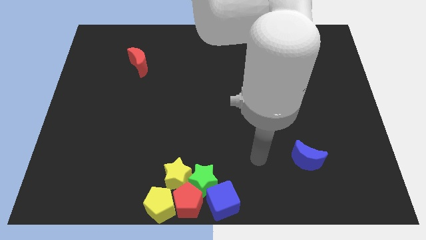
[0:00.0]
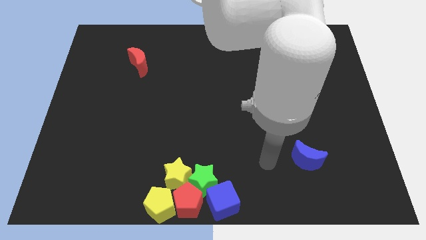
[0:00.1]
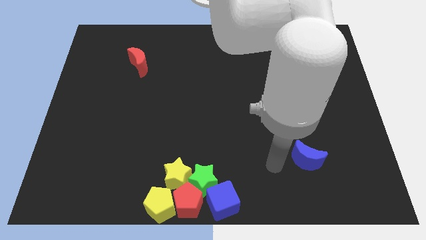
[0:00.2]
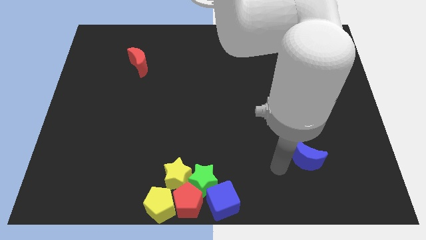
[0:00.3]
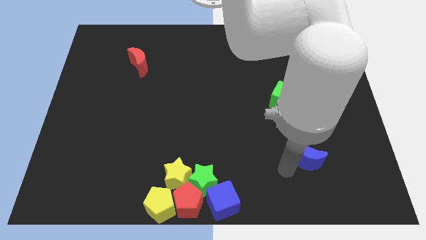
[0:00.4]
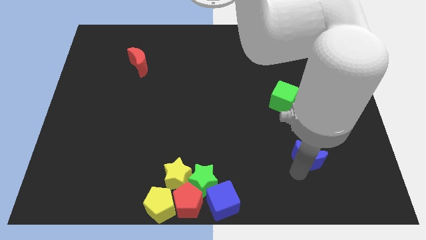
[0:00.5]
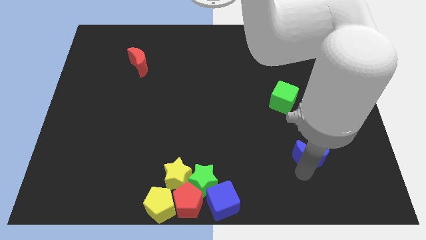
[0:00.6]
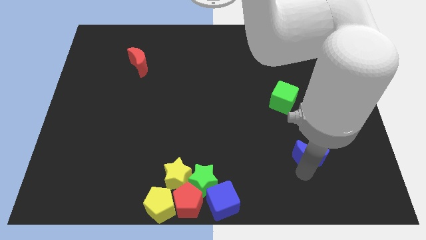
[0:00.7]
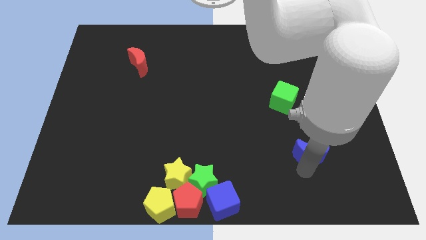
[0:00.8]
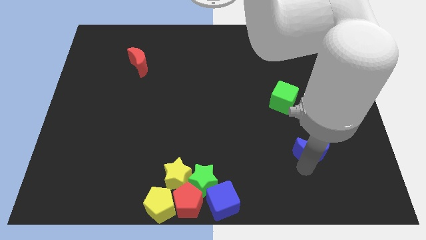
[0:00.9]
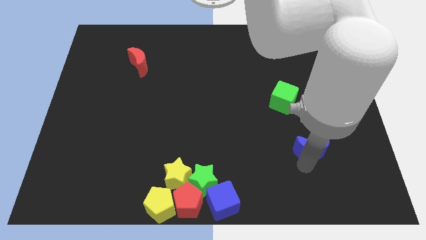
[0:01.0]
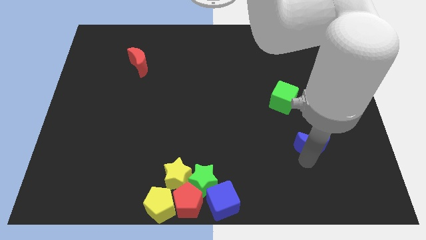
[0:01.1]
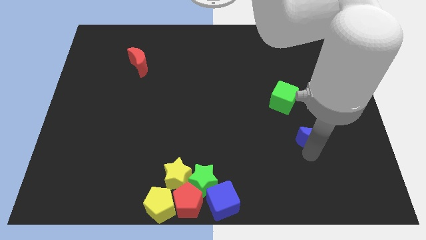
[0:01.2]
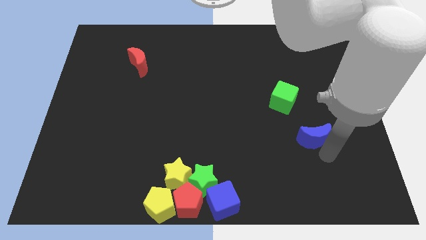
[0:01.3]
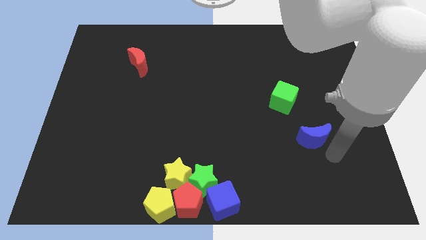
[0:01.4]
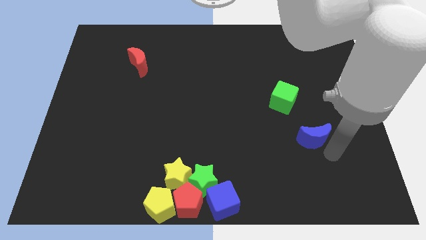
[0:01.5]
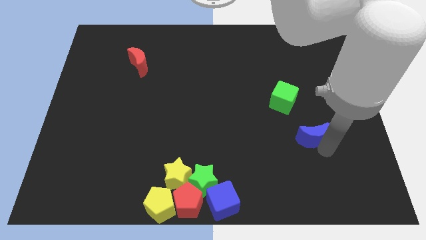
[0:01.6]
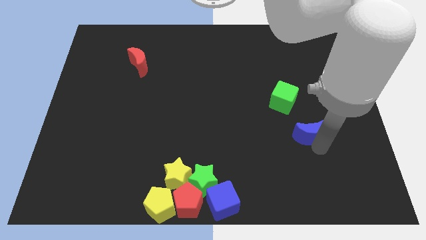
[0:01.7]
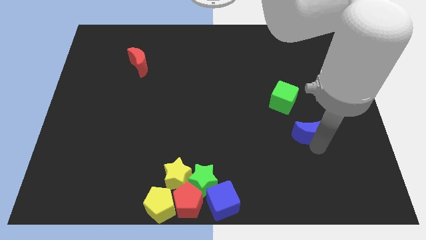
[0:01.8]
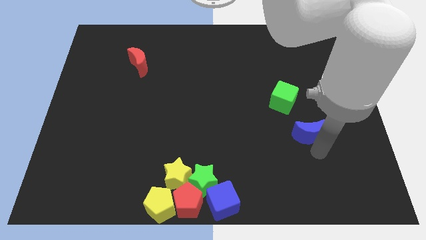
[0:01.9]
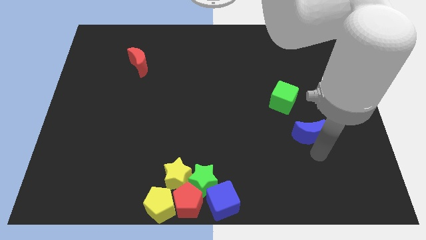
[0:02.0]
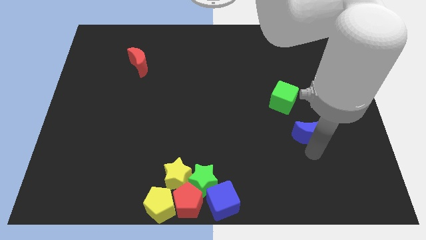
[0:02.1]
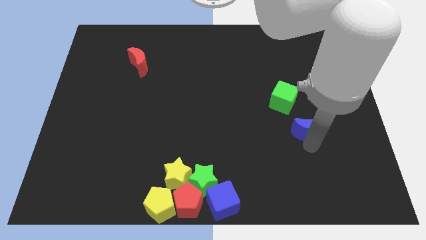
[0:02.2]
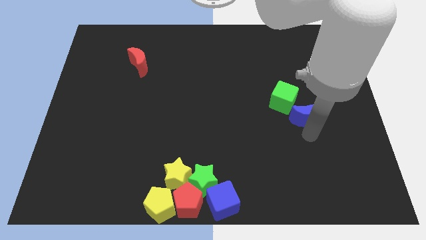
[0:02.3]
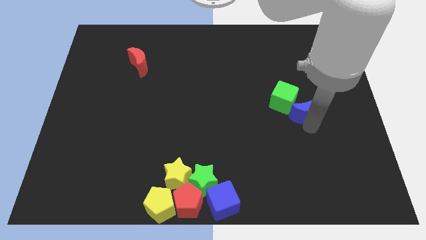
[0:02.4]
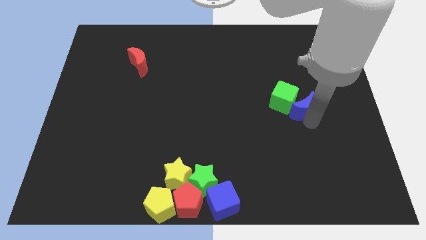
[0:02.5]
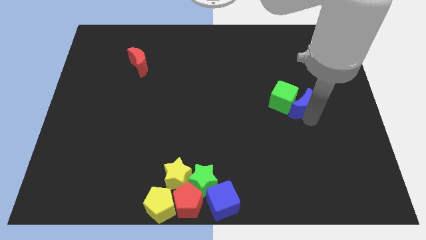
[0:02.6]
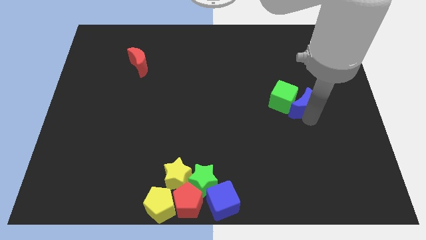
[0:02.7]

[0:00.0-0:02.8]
push the blue crescent into green cube

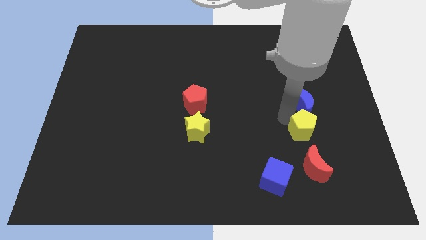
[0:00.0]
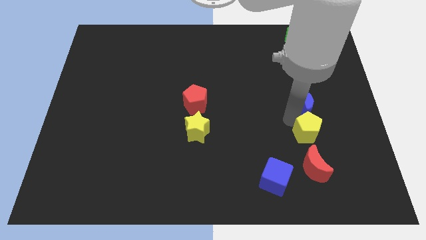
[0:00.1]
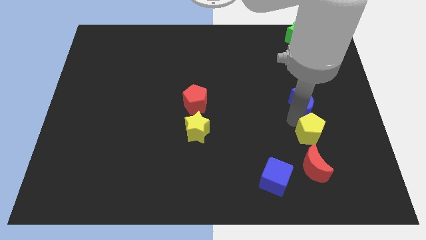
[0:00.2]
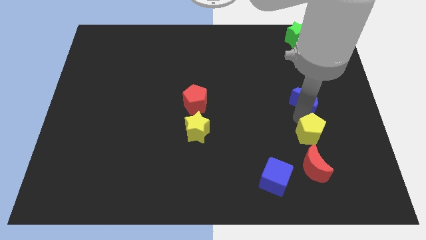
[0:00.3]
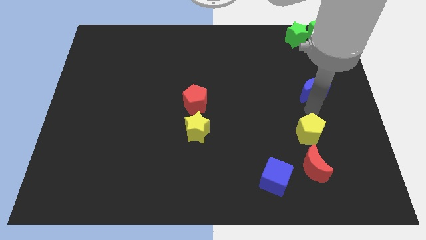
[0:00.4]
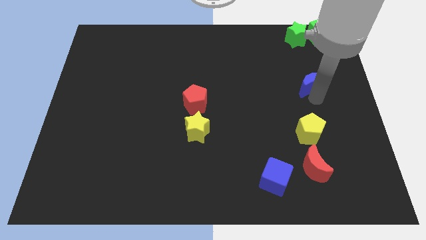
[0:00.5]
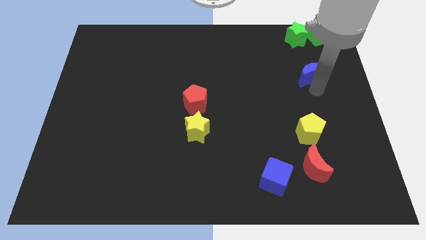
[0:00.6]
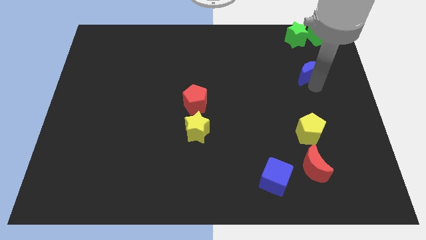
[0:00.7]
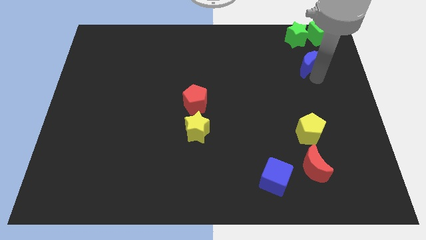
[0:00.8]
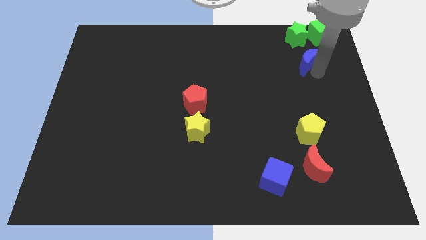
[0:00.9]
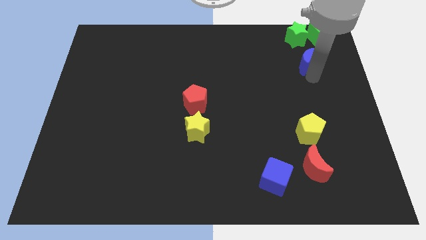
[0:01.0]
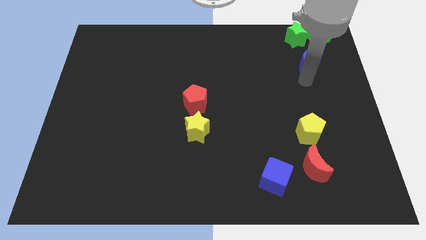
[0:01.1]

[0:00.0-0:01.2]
separate blue moon from yellow pentagon

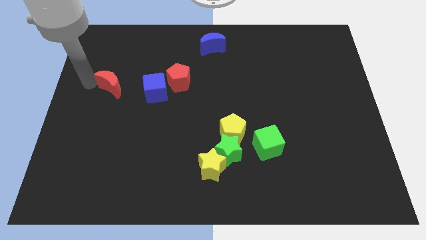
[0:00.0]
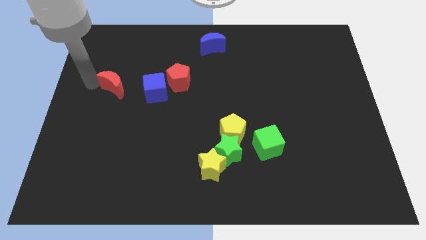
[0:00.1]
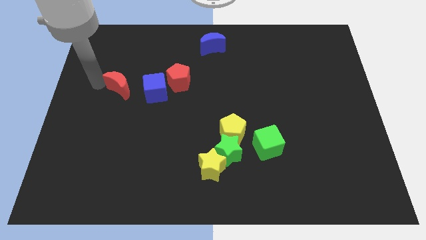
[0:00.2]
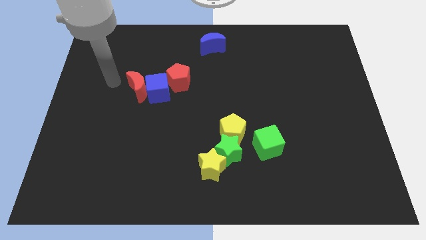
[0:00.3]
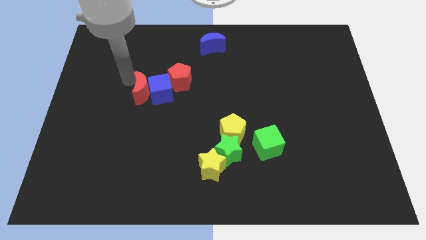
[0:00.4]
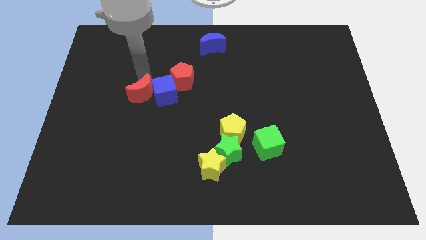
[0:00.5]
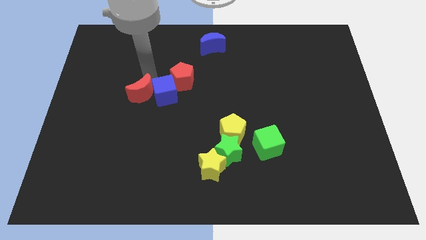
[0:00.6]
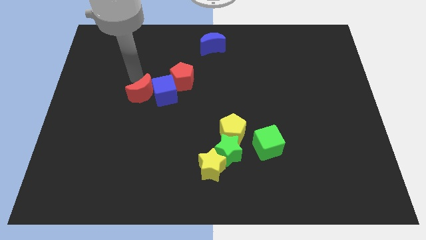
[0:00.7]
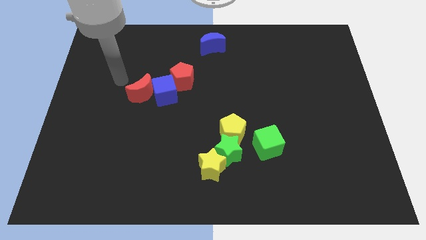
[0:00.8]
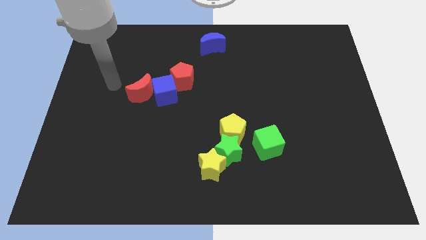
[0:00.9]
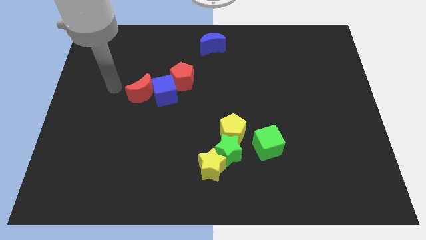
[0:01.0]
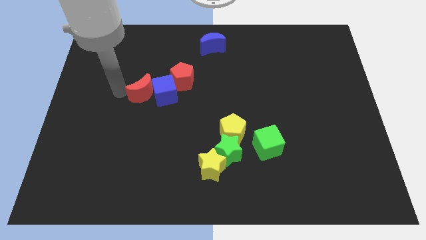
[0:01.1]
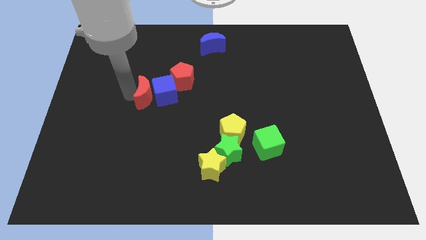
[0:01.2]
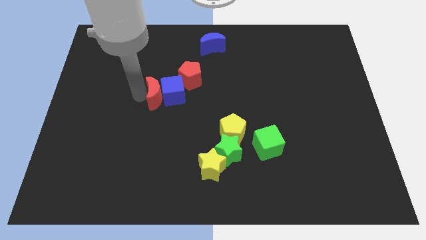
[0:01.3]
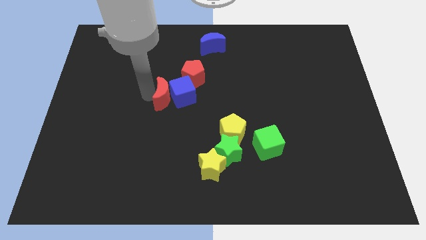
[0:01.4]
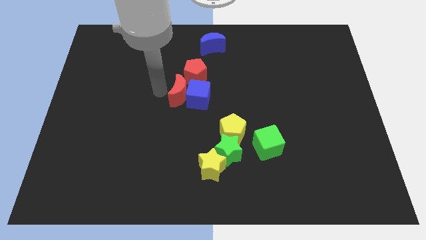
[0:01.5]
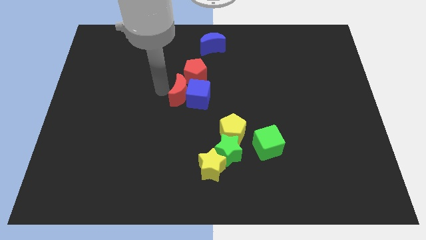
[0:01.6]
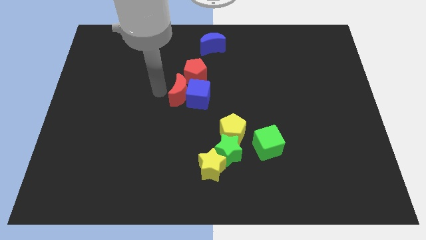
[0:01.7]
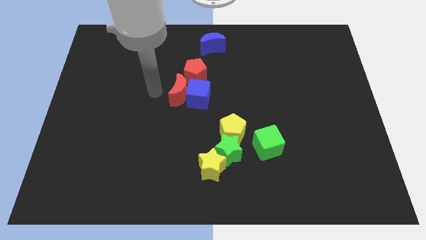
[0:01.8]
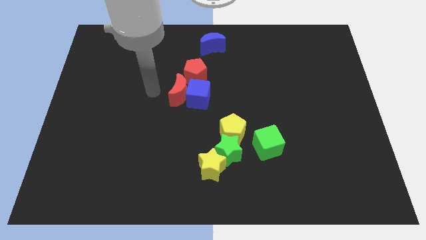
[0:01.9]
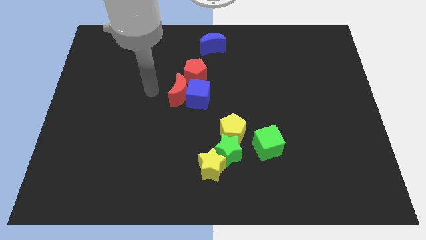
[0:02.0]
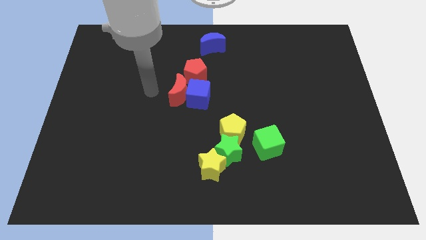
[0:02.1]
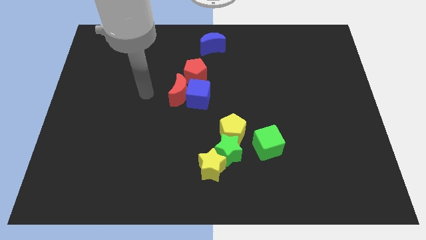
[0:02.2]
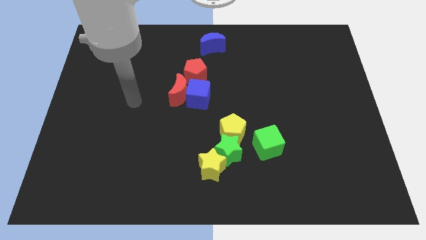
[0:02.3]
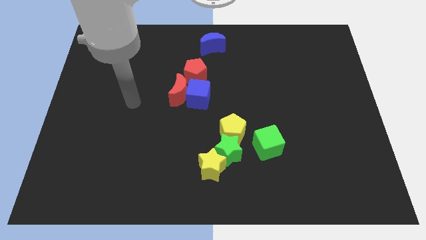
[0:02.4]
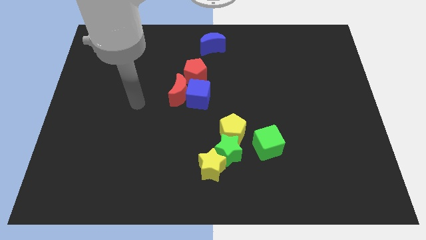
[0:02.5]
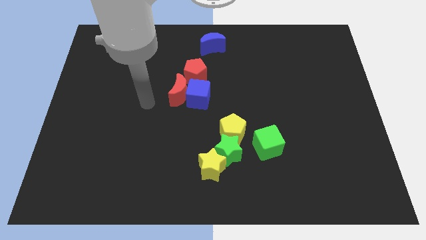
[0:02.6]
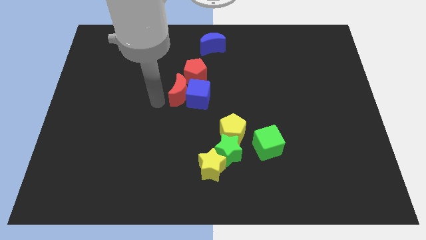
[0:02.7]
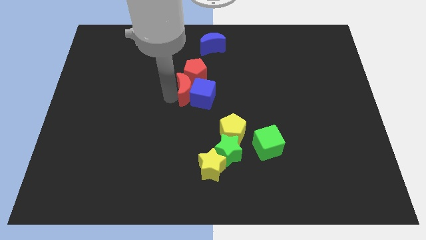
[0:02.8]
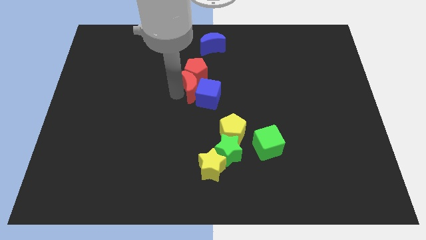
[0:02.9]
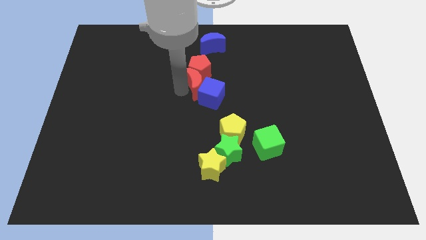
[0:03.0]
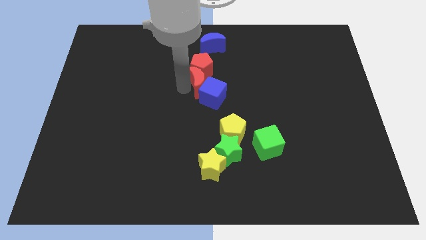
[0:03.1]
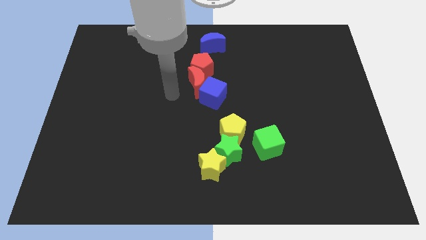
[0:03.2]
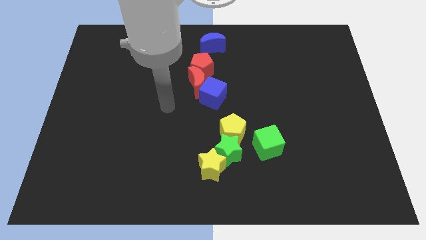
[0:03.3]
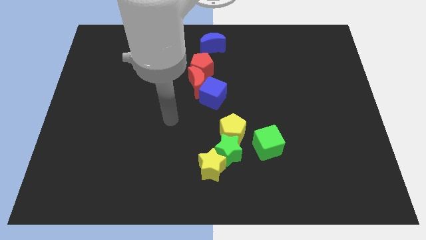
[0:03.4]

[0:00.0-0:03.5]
move the red blocks and the blue cube slightly to the right

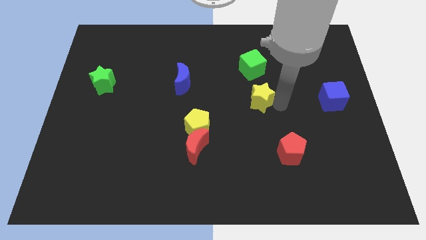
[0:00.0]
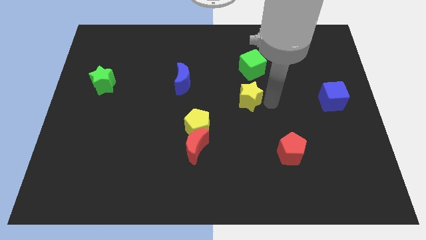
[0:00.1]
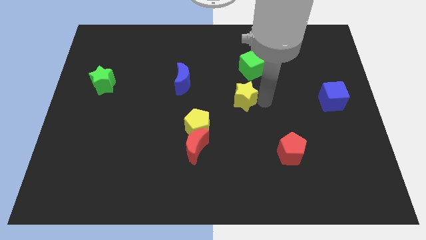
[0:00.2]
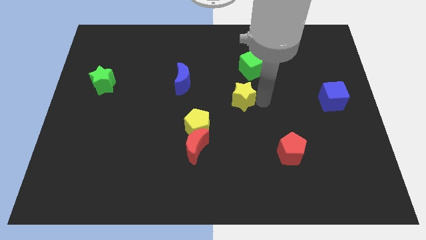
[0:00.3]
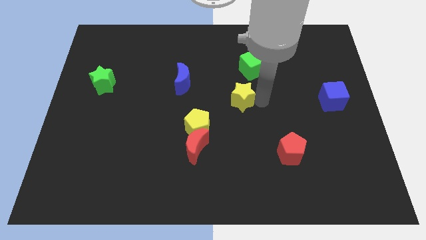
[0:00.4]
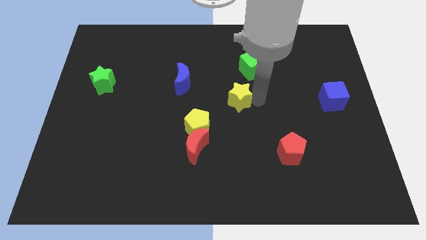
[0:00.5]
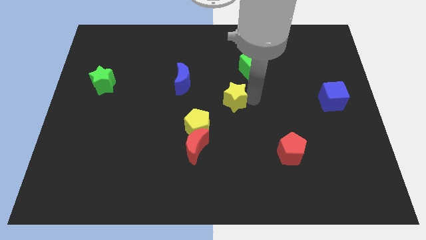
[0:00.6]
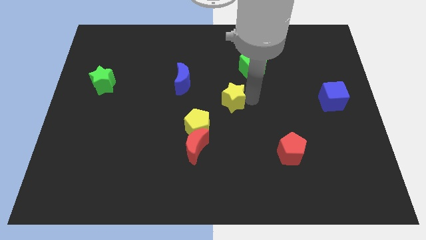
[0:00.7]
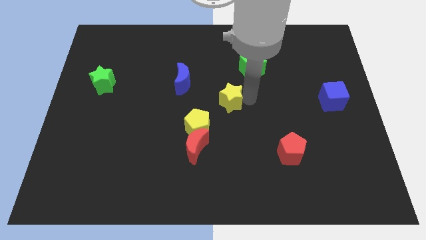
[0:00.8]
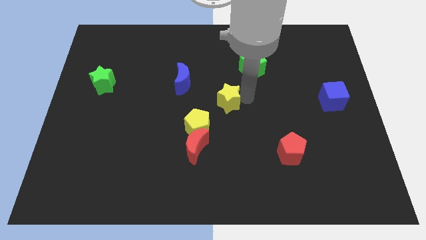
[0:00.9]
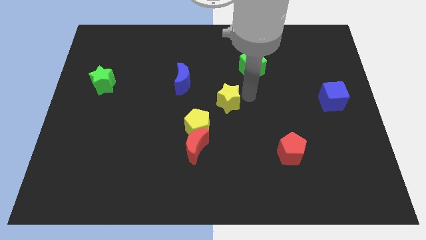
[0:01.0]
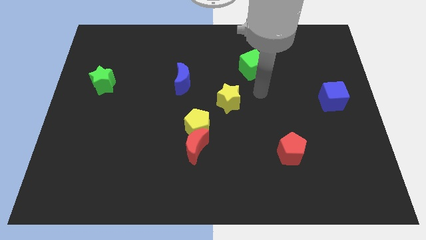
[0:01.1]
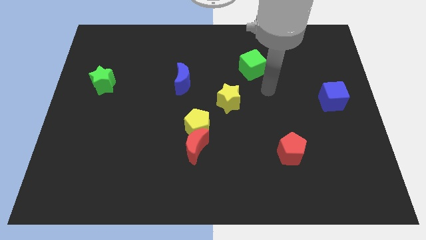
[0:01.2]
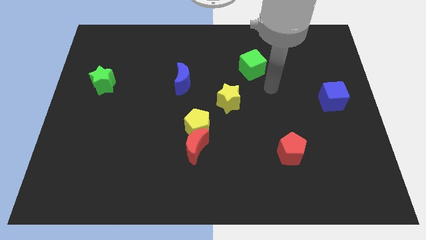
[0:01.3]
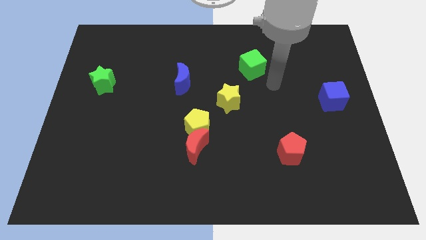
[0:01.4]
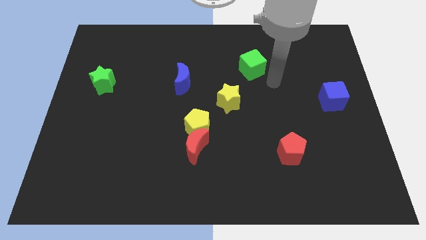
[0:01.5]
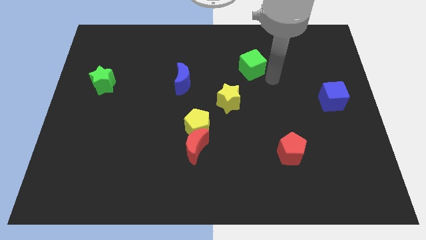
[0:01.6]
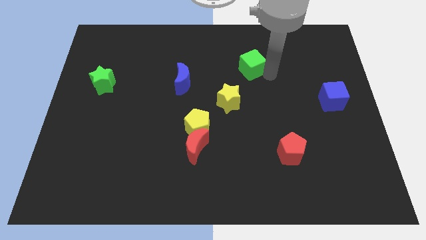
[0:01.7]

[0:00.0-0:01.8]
put the yellow star diagonally in between the yellow pentagon and green cube
